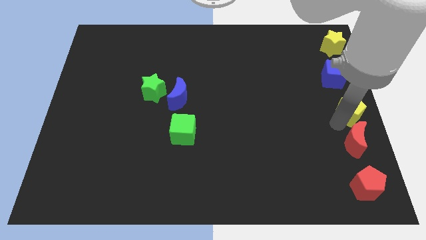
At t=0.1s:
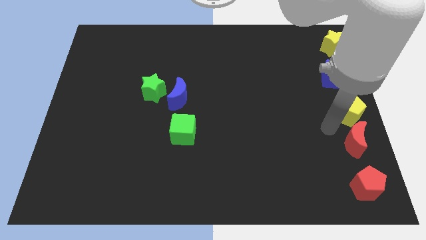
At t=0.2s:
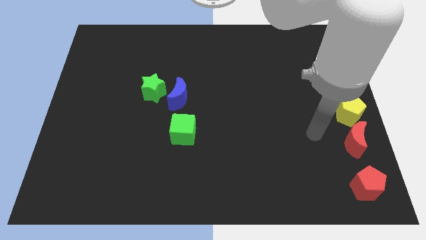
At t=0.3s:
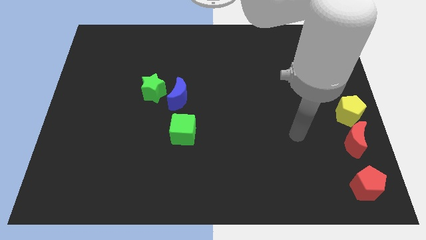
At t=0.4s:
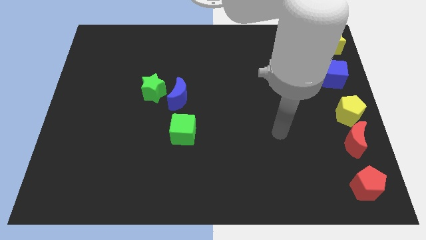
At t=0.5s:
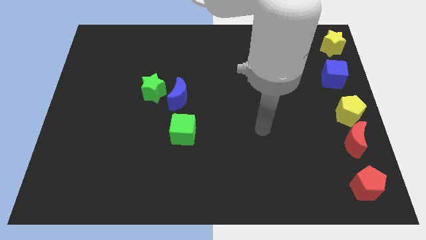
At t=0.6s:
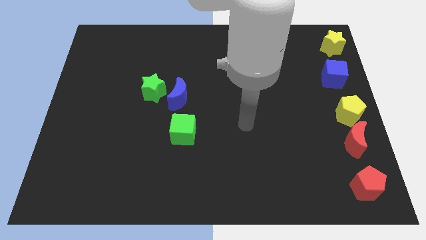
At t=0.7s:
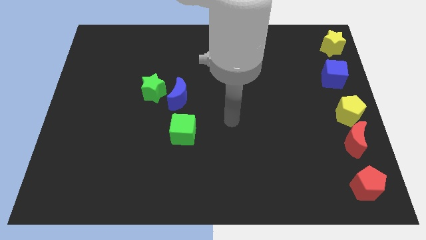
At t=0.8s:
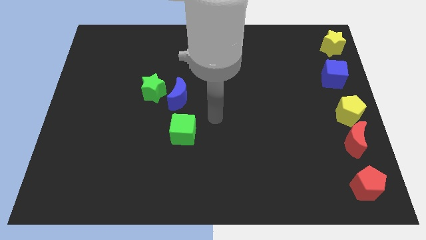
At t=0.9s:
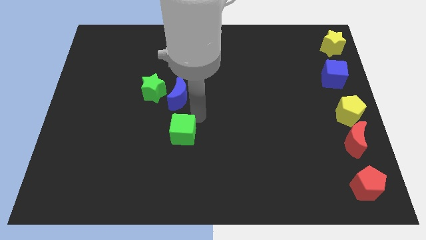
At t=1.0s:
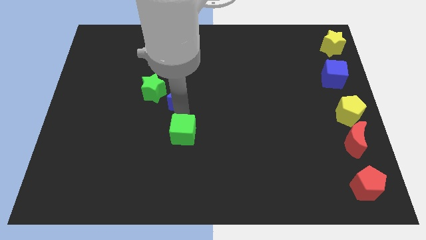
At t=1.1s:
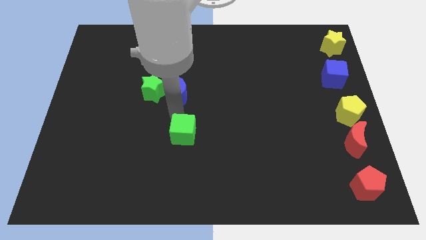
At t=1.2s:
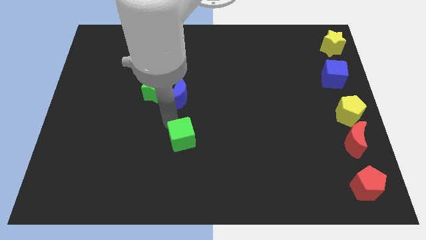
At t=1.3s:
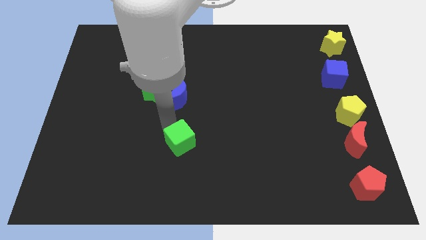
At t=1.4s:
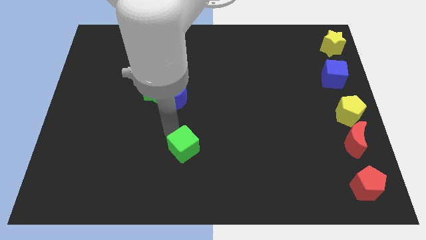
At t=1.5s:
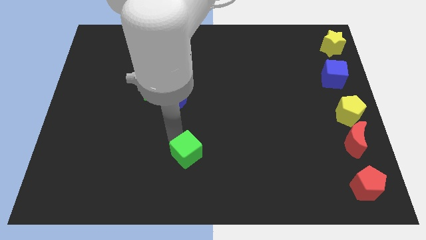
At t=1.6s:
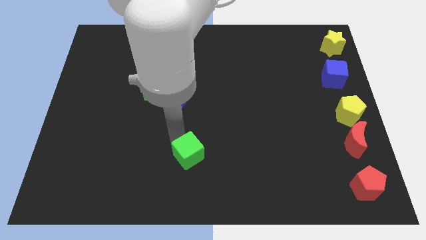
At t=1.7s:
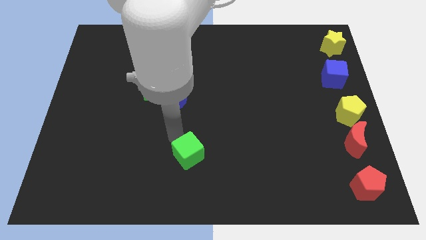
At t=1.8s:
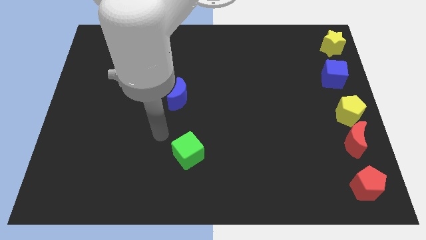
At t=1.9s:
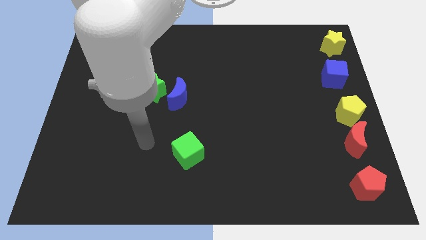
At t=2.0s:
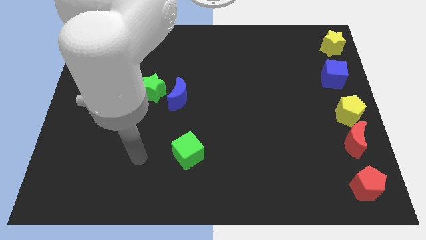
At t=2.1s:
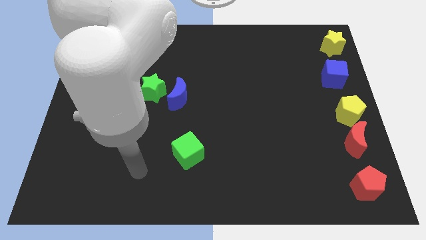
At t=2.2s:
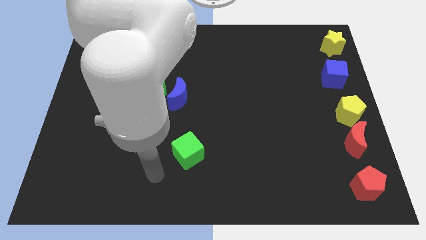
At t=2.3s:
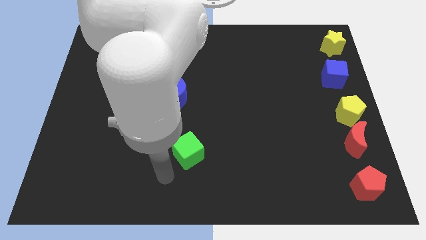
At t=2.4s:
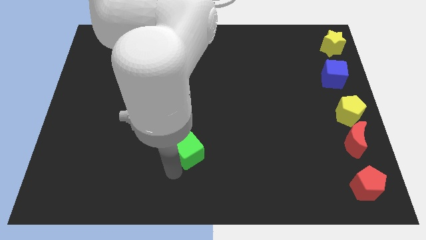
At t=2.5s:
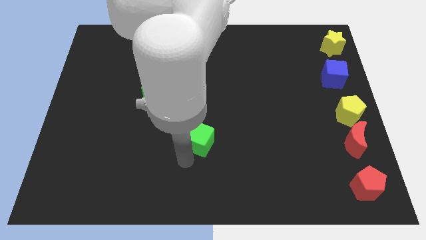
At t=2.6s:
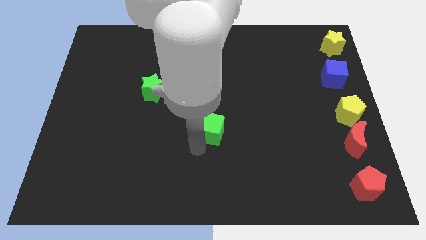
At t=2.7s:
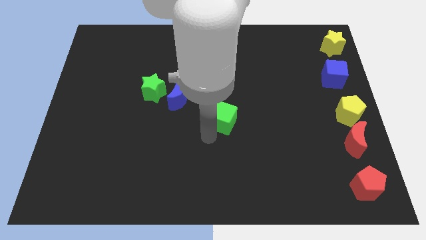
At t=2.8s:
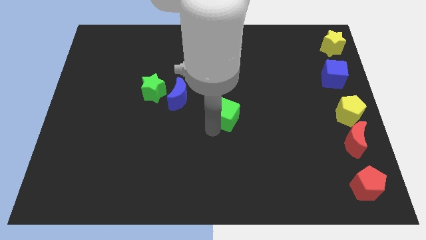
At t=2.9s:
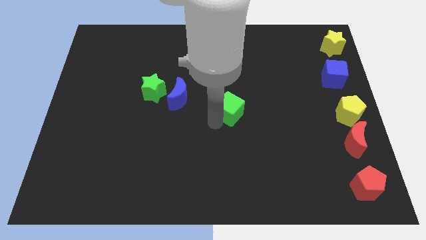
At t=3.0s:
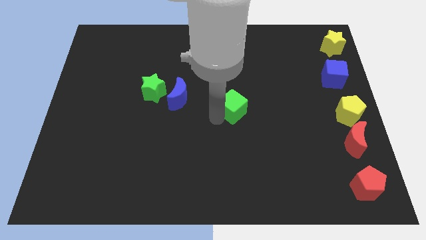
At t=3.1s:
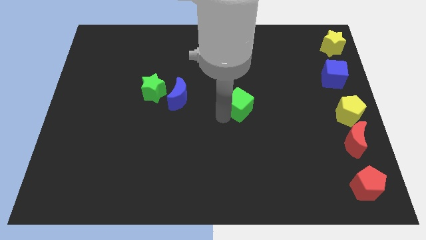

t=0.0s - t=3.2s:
place green cube to the right of blue moon

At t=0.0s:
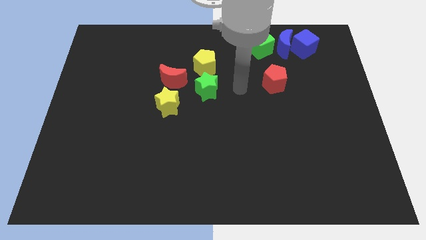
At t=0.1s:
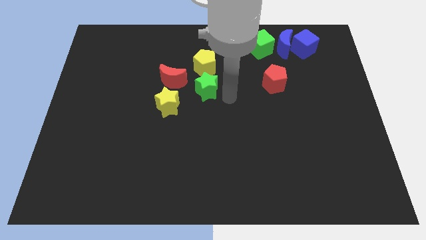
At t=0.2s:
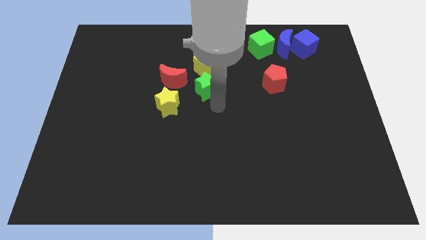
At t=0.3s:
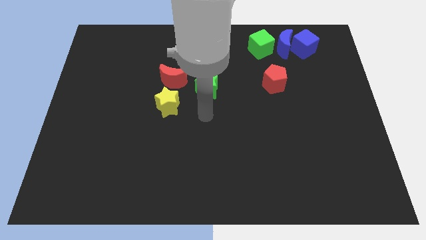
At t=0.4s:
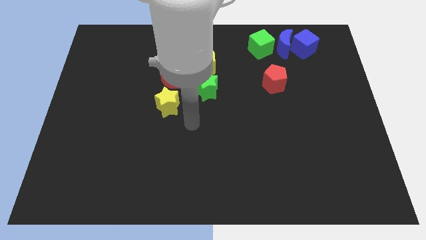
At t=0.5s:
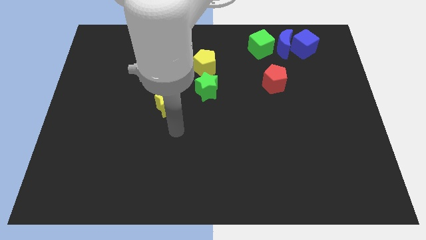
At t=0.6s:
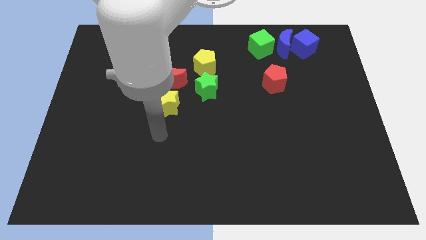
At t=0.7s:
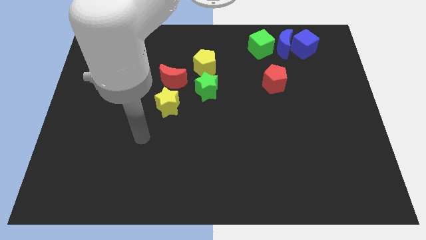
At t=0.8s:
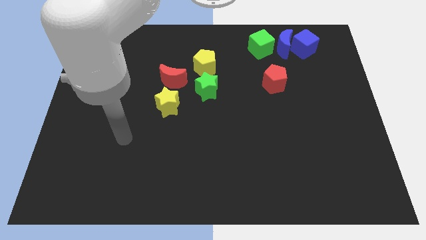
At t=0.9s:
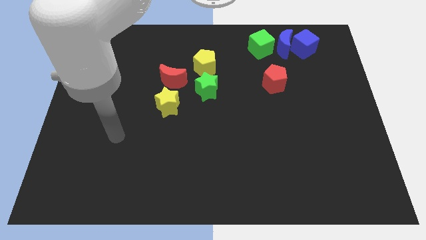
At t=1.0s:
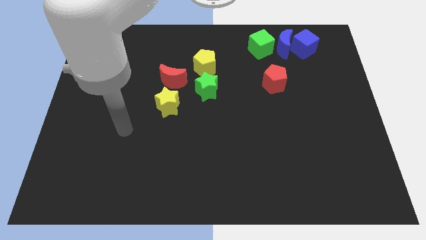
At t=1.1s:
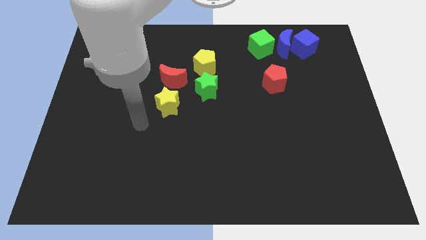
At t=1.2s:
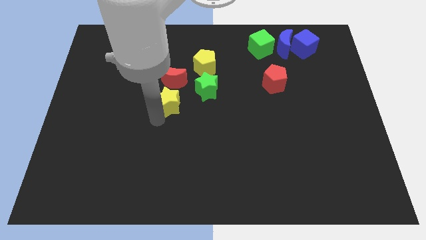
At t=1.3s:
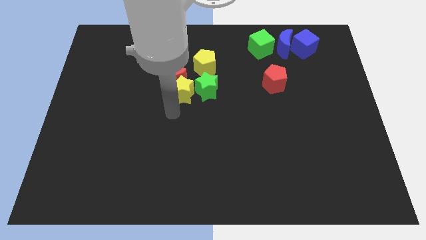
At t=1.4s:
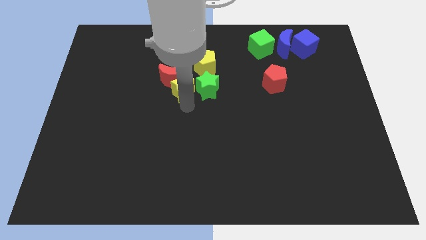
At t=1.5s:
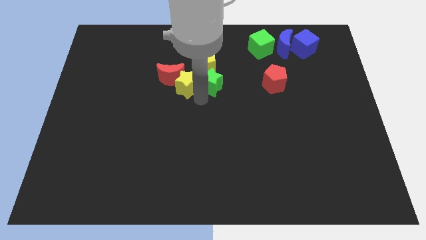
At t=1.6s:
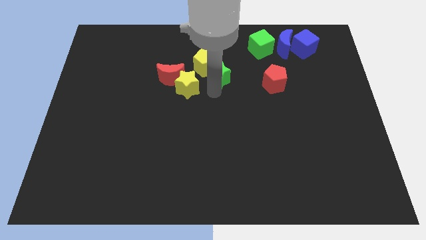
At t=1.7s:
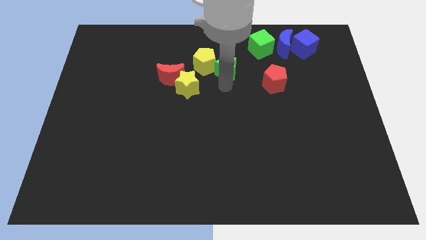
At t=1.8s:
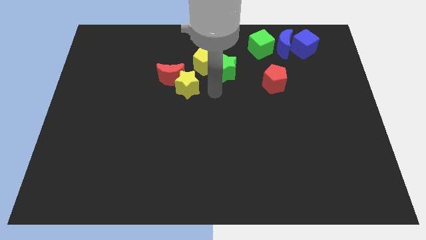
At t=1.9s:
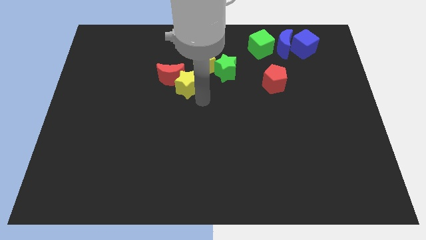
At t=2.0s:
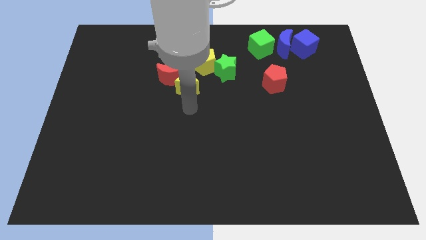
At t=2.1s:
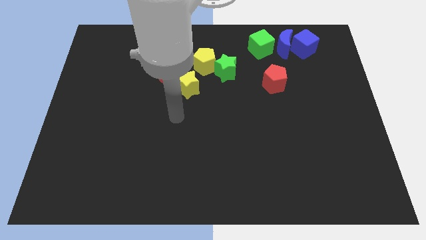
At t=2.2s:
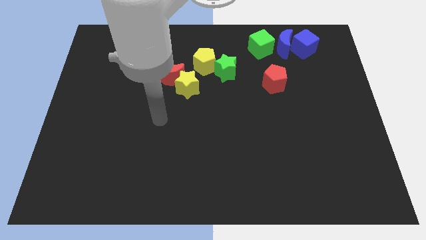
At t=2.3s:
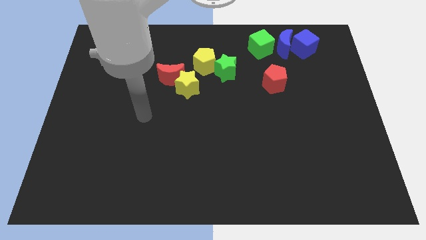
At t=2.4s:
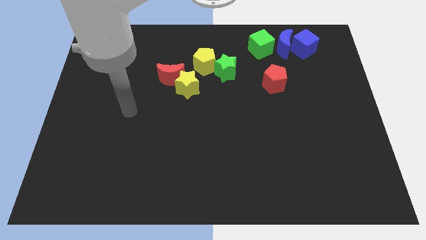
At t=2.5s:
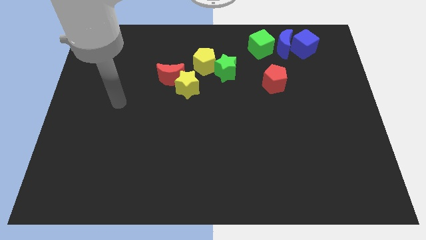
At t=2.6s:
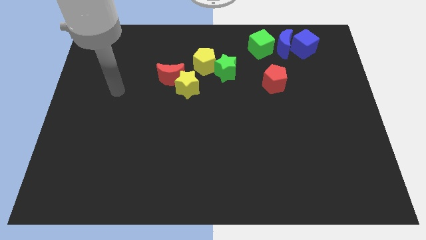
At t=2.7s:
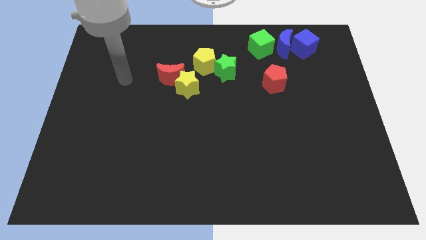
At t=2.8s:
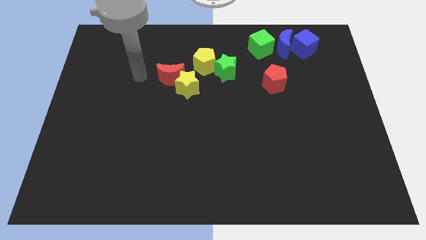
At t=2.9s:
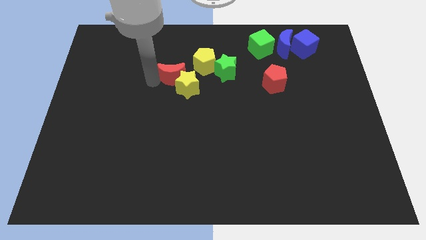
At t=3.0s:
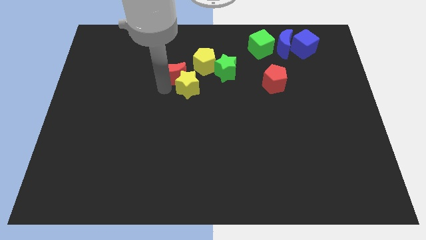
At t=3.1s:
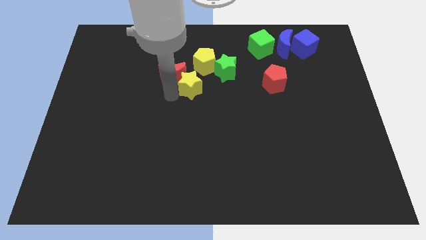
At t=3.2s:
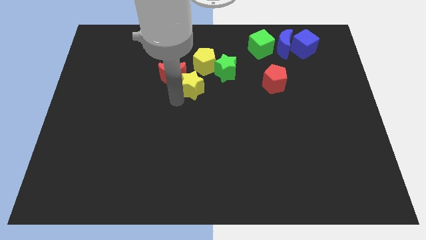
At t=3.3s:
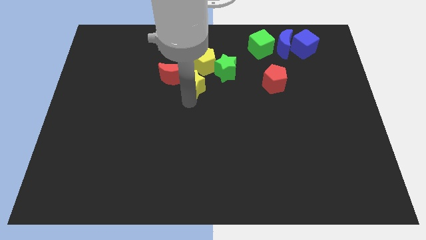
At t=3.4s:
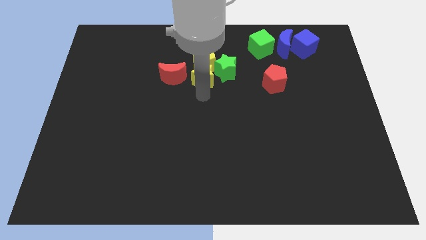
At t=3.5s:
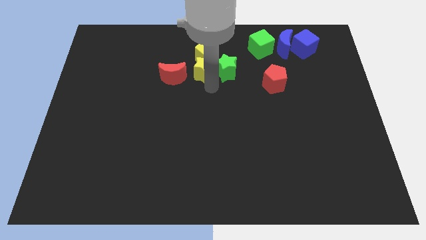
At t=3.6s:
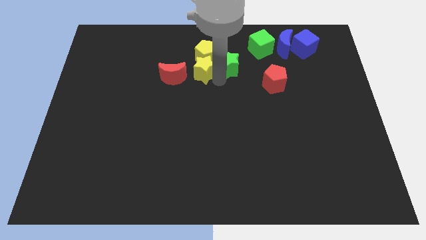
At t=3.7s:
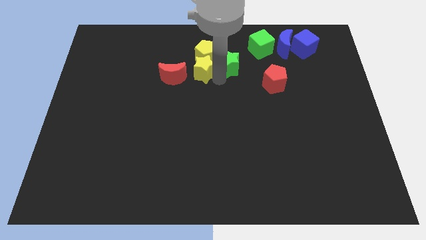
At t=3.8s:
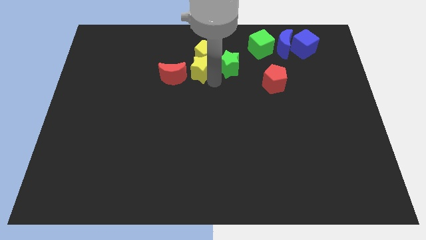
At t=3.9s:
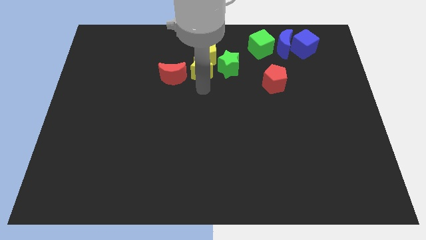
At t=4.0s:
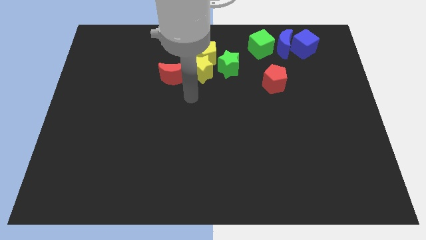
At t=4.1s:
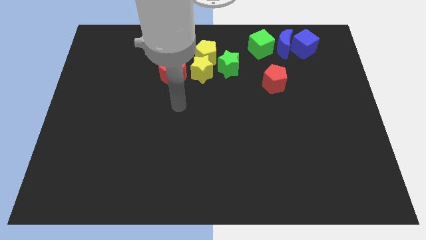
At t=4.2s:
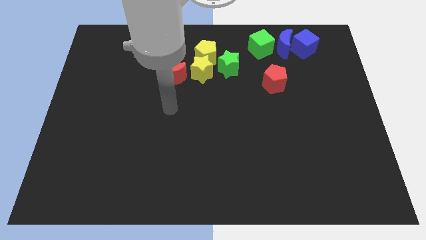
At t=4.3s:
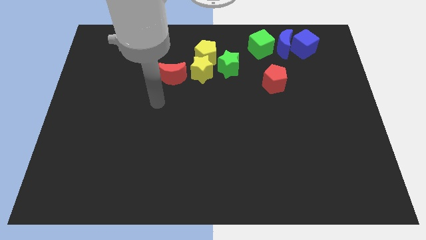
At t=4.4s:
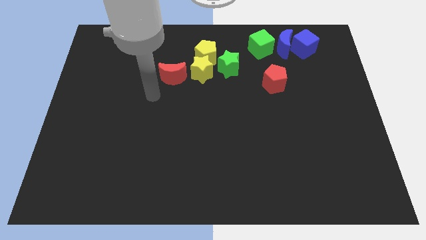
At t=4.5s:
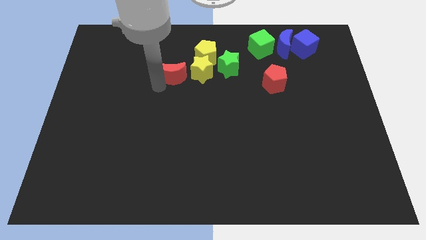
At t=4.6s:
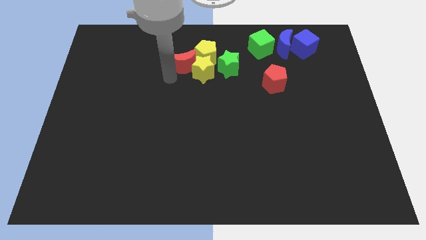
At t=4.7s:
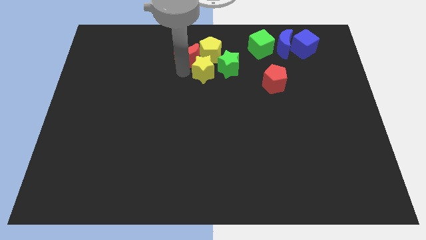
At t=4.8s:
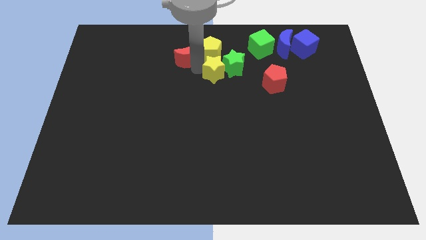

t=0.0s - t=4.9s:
put the green star red crescent and yellow blocks at the top center

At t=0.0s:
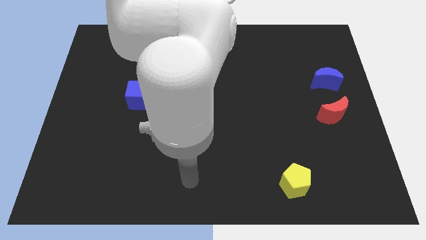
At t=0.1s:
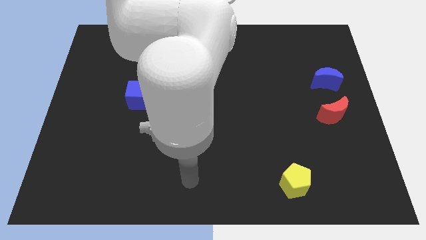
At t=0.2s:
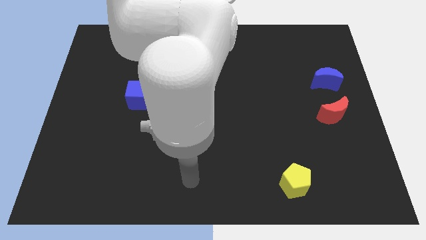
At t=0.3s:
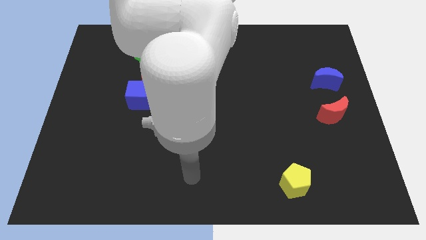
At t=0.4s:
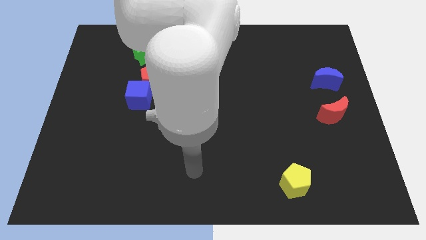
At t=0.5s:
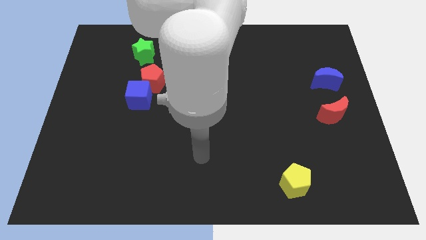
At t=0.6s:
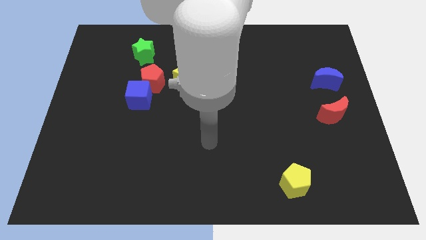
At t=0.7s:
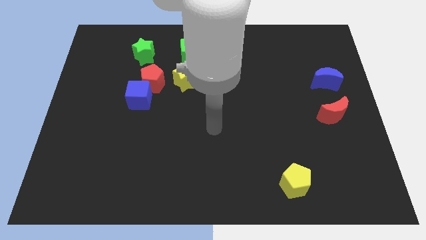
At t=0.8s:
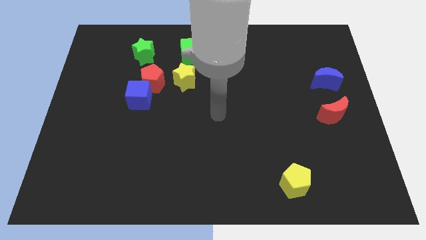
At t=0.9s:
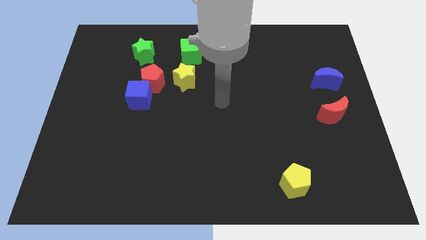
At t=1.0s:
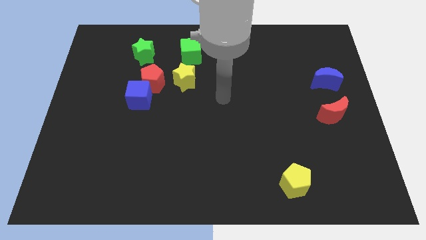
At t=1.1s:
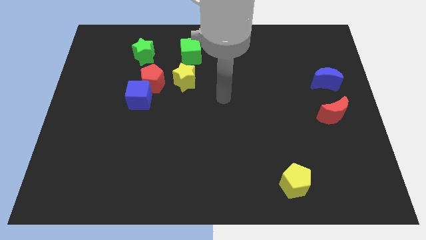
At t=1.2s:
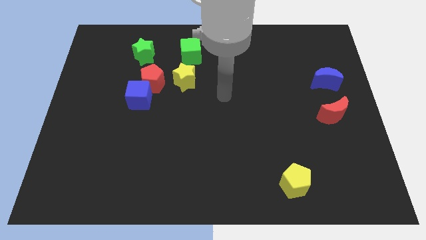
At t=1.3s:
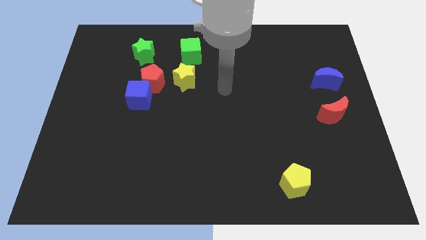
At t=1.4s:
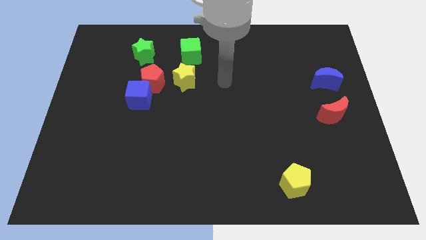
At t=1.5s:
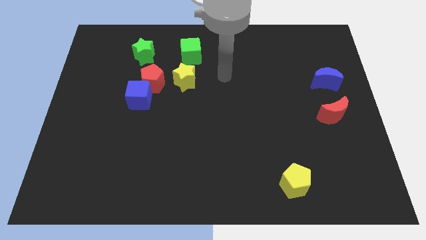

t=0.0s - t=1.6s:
point your arm at the right of the yellow star
